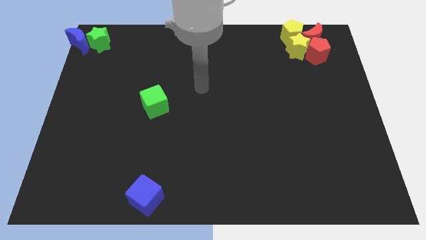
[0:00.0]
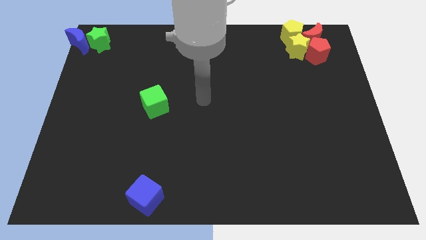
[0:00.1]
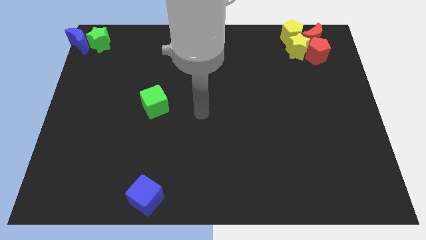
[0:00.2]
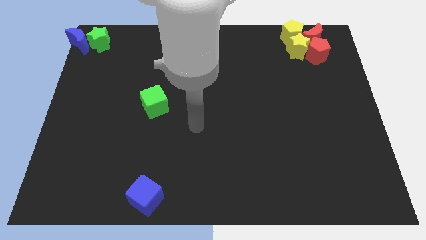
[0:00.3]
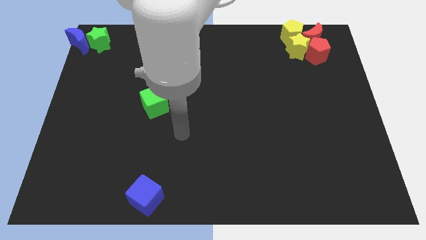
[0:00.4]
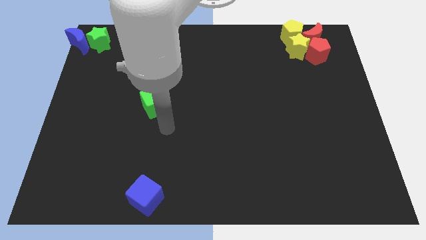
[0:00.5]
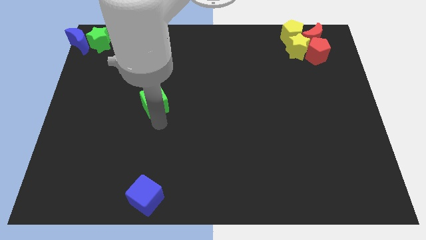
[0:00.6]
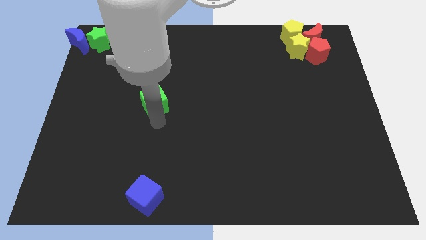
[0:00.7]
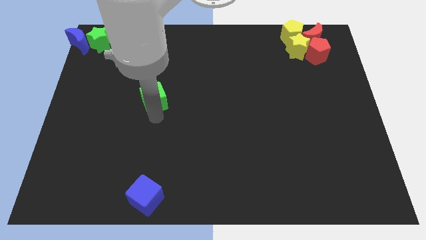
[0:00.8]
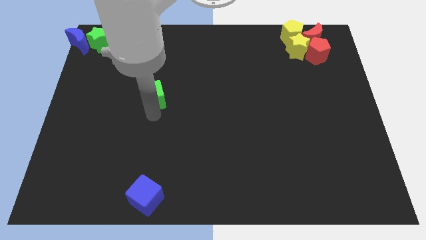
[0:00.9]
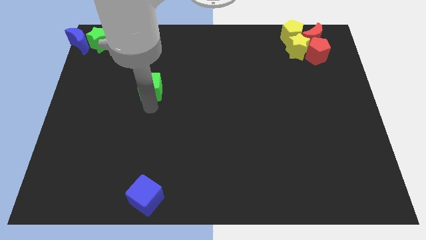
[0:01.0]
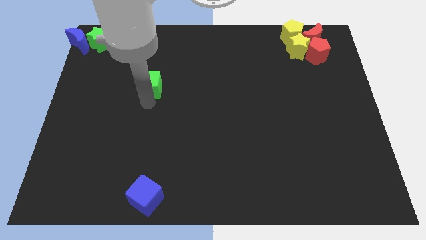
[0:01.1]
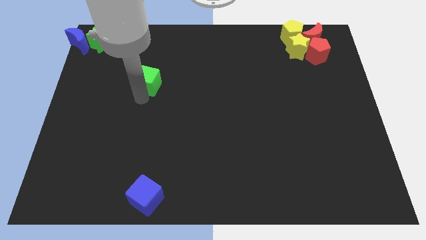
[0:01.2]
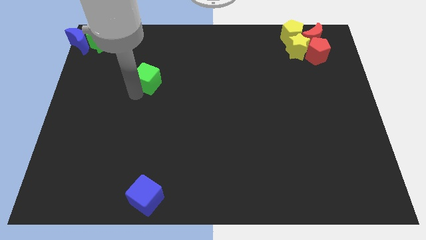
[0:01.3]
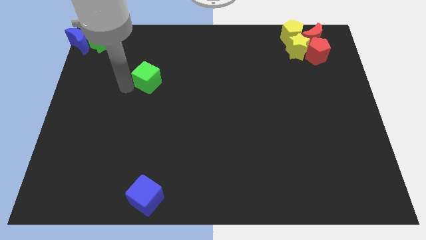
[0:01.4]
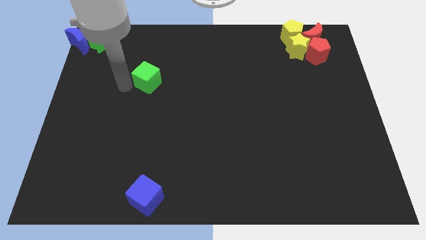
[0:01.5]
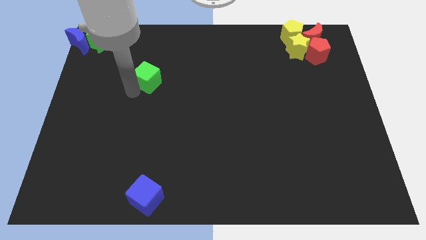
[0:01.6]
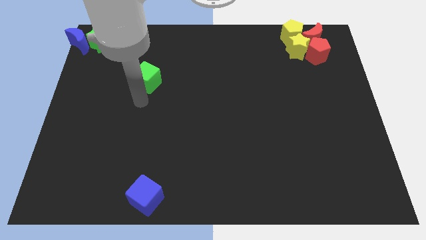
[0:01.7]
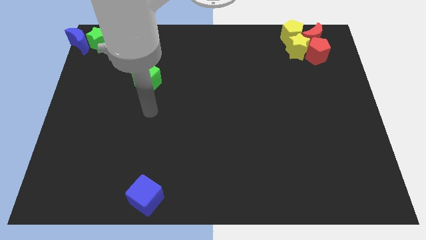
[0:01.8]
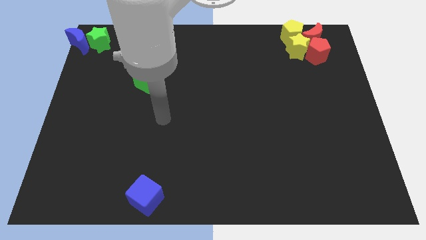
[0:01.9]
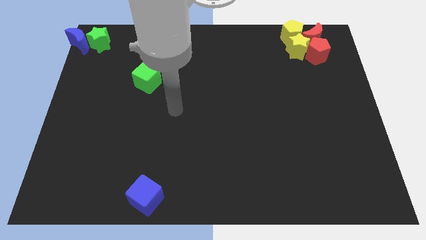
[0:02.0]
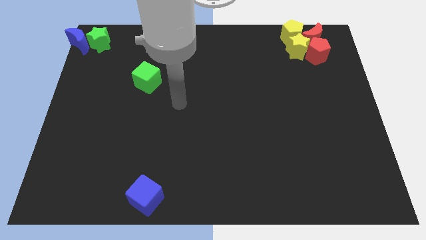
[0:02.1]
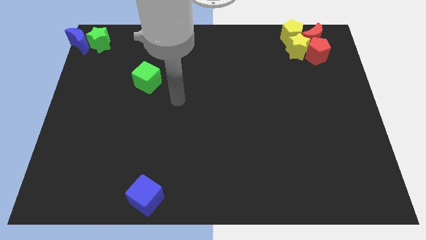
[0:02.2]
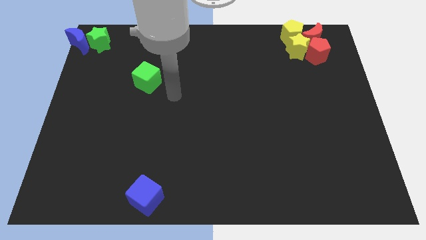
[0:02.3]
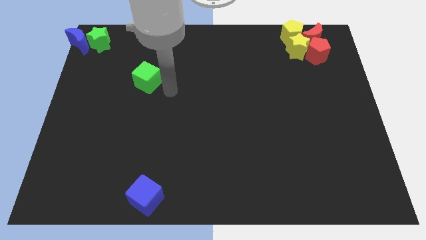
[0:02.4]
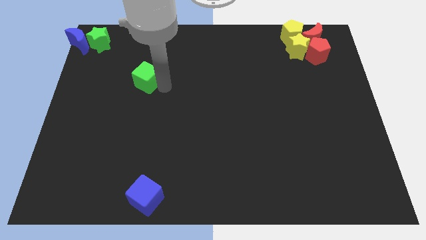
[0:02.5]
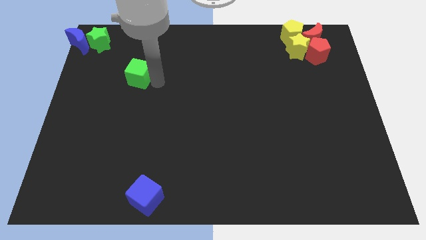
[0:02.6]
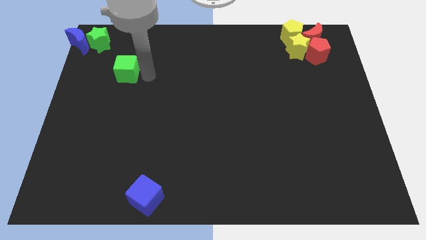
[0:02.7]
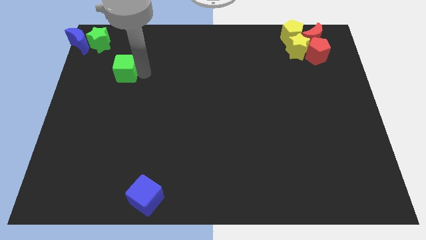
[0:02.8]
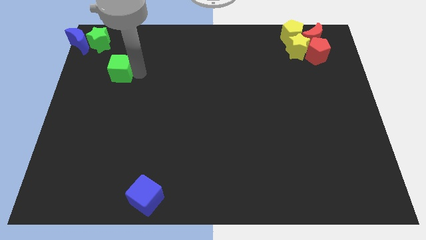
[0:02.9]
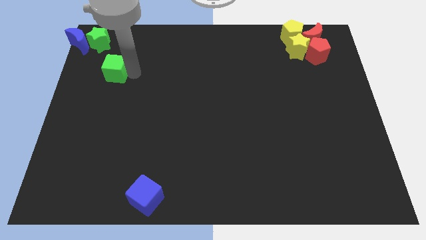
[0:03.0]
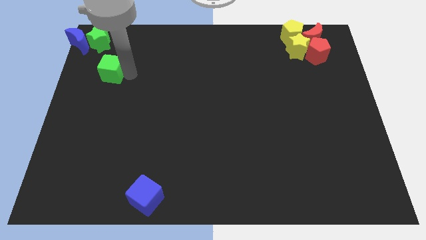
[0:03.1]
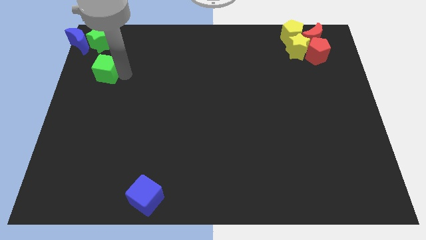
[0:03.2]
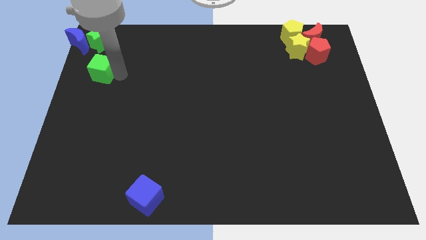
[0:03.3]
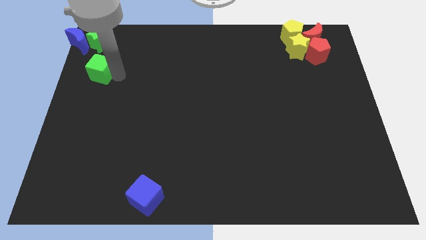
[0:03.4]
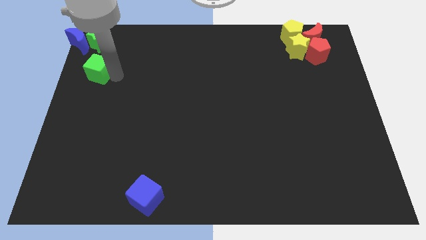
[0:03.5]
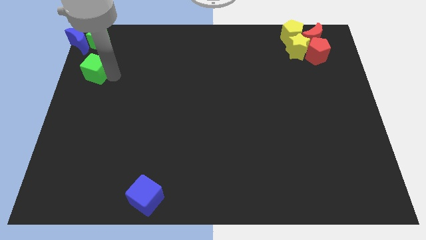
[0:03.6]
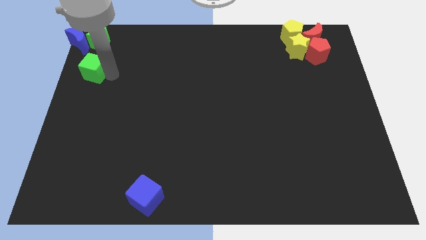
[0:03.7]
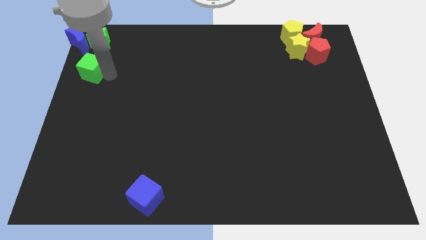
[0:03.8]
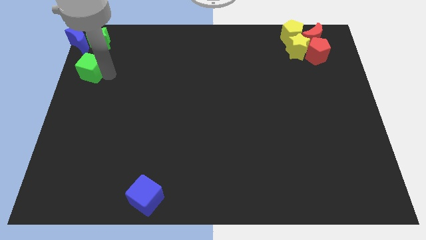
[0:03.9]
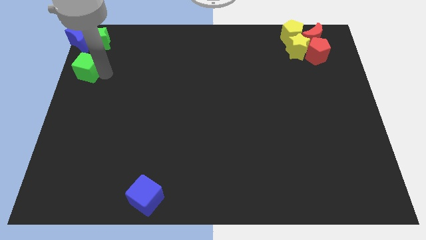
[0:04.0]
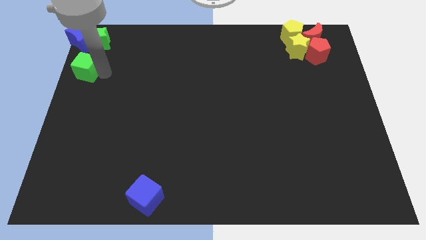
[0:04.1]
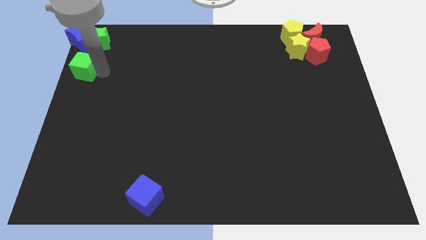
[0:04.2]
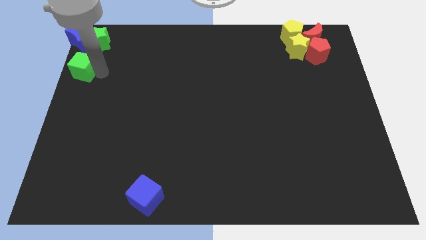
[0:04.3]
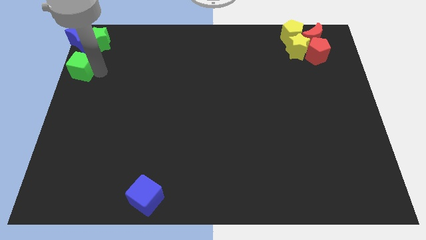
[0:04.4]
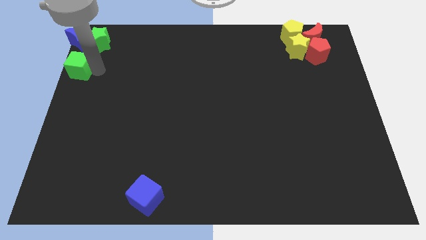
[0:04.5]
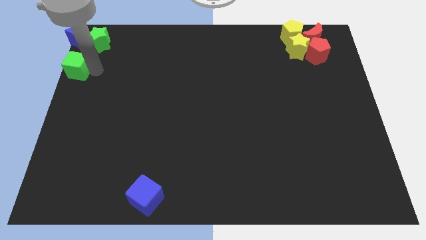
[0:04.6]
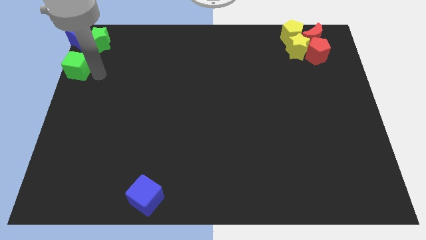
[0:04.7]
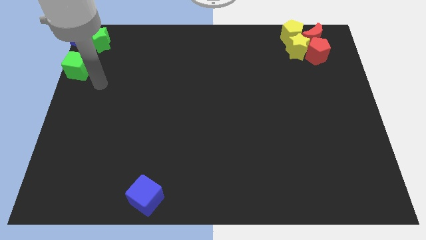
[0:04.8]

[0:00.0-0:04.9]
move green cube below the blue moon

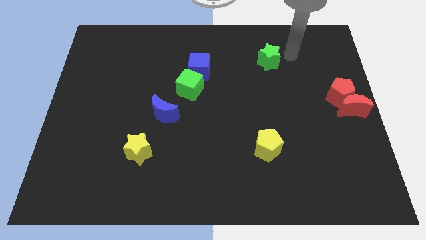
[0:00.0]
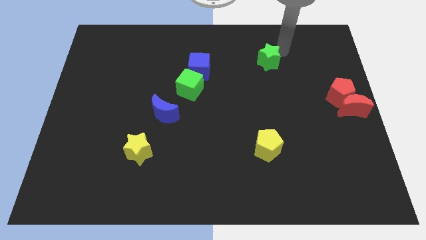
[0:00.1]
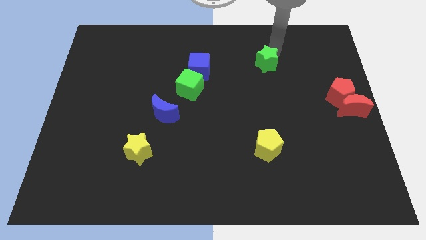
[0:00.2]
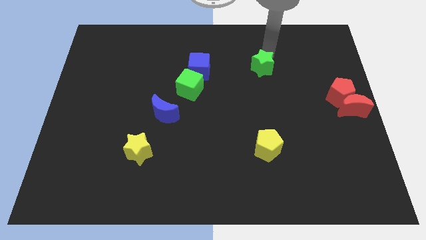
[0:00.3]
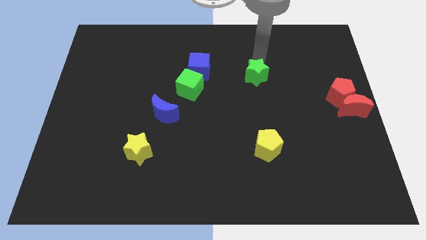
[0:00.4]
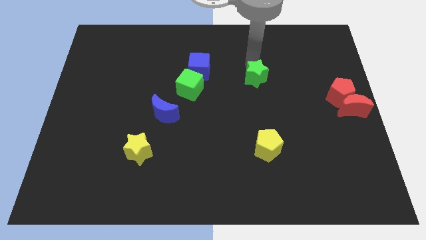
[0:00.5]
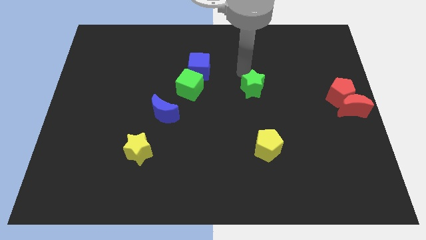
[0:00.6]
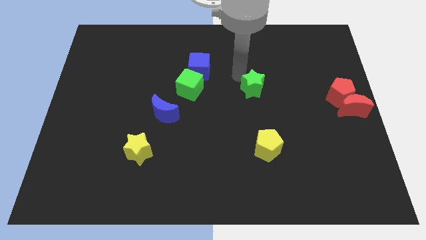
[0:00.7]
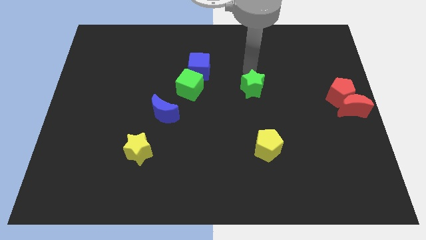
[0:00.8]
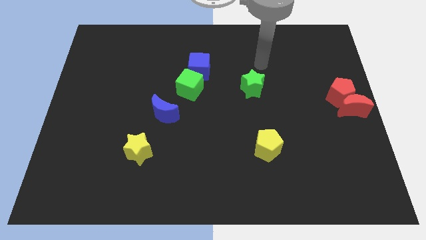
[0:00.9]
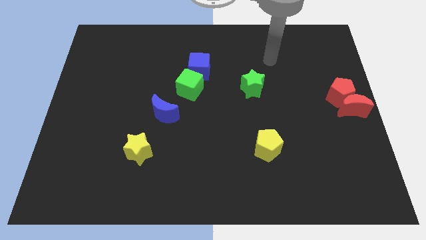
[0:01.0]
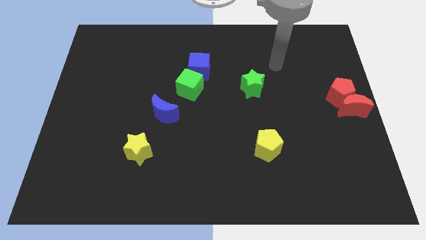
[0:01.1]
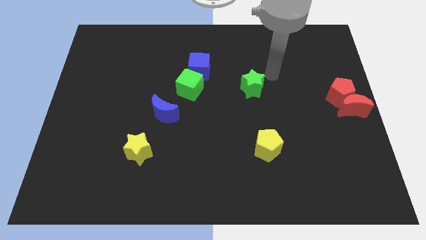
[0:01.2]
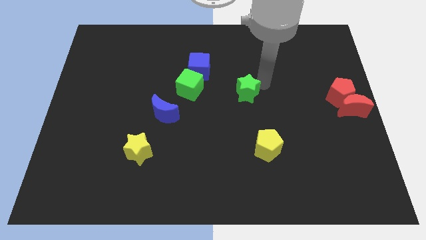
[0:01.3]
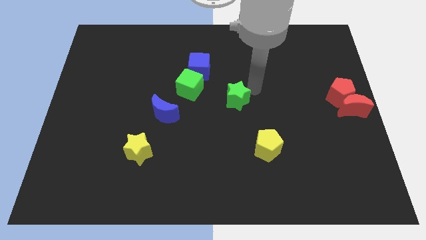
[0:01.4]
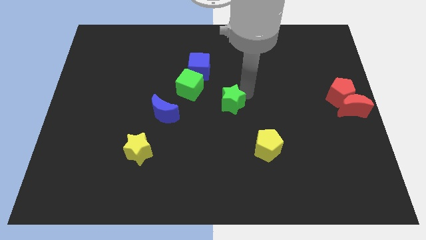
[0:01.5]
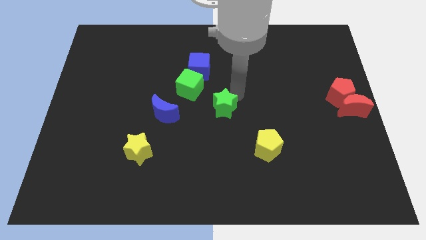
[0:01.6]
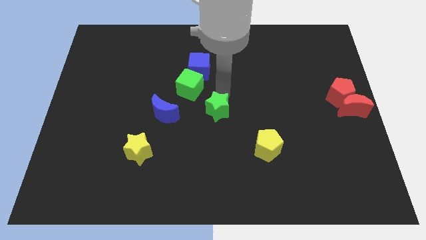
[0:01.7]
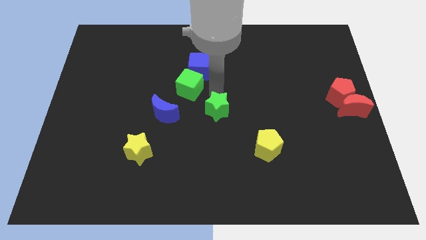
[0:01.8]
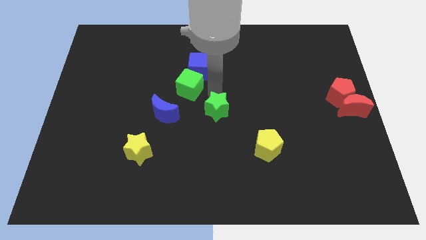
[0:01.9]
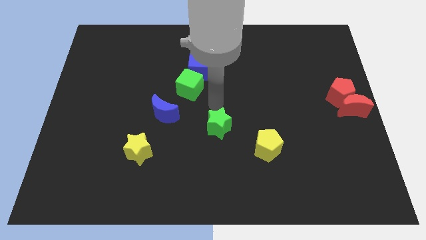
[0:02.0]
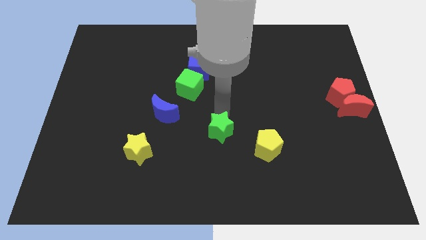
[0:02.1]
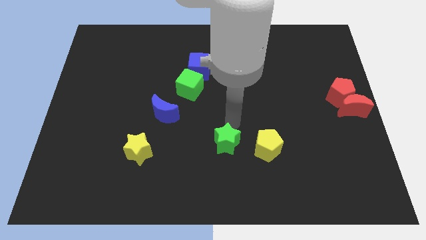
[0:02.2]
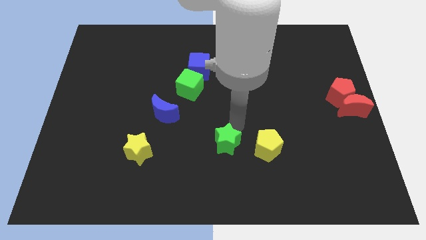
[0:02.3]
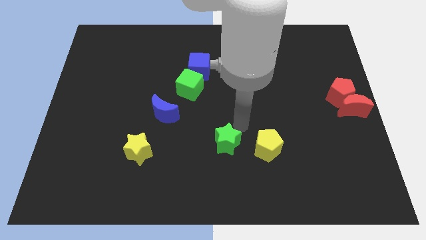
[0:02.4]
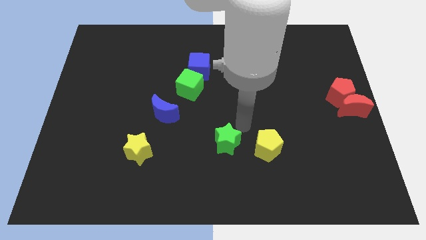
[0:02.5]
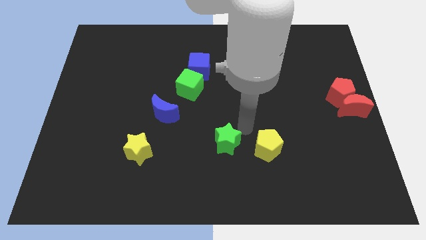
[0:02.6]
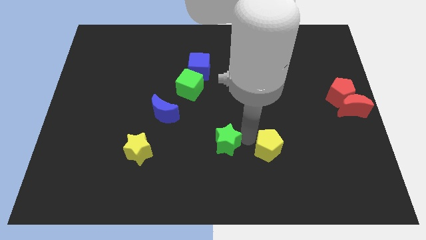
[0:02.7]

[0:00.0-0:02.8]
put green star on left side of yellow pentagon

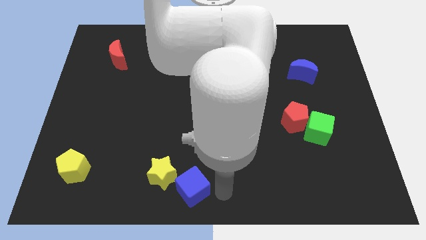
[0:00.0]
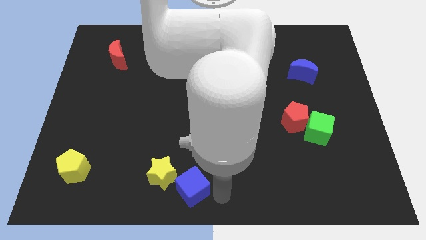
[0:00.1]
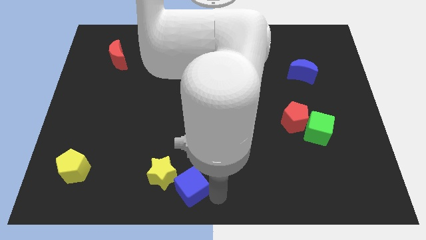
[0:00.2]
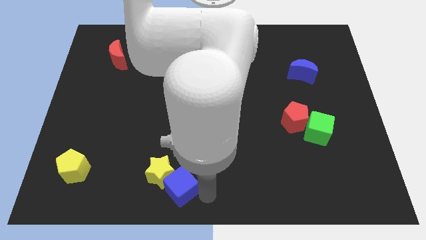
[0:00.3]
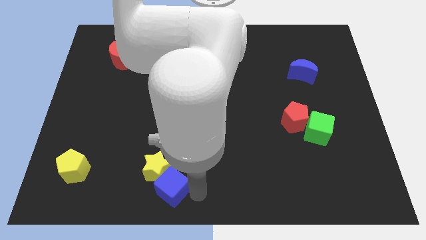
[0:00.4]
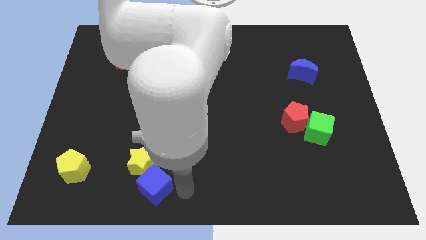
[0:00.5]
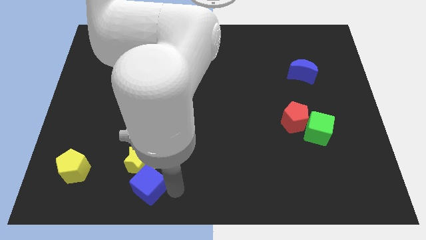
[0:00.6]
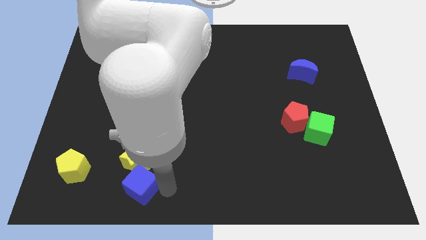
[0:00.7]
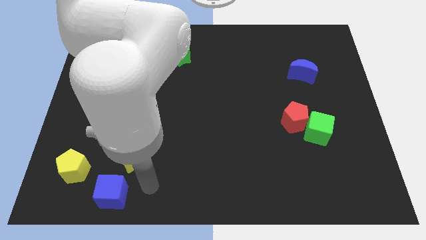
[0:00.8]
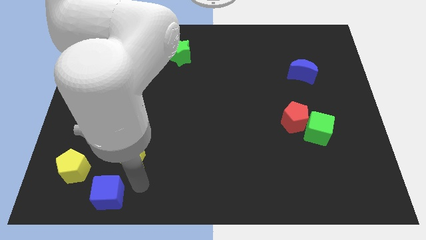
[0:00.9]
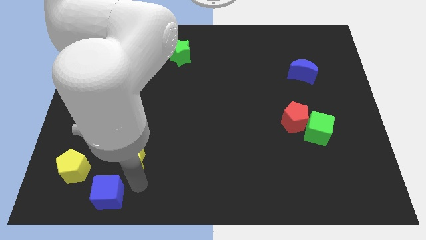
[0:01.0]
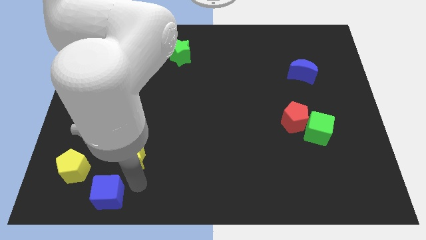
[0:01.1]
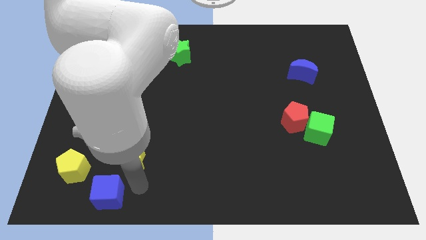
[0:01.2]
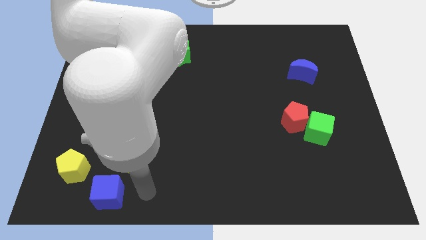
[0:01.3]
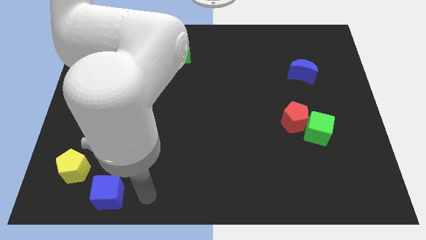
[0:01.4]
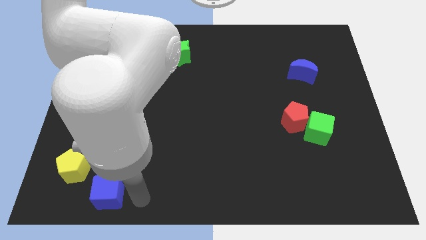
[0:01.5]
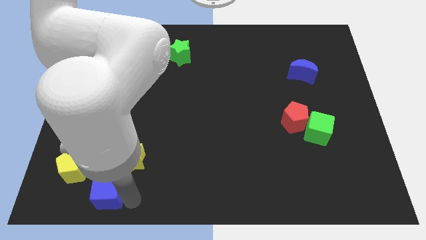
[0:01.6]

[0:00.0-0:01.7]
separate the blue cube from yellow star
